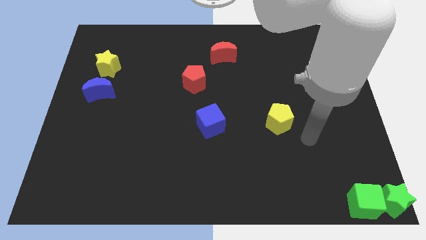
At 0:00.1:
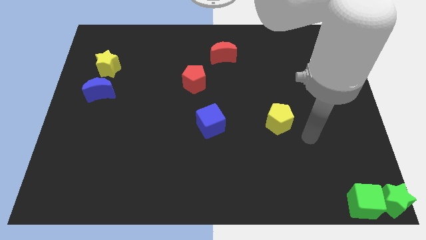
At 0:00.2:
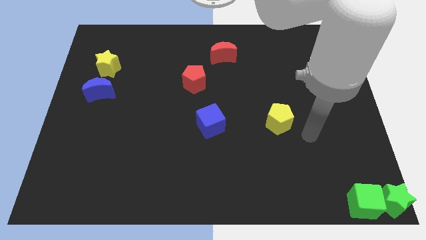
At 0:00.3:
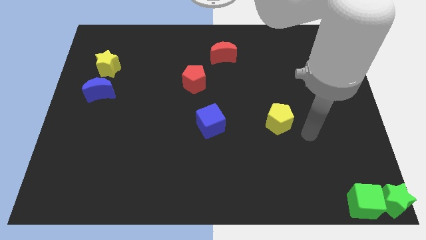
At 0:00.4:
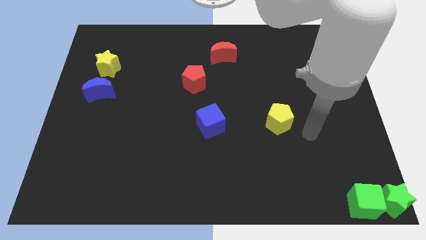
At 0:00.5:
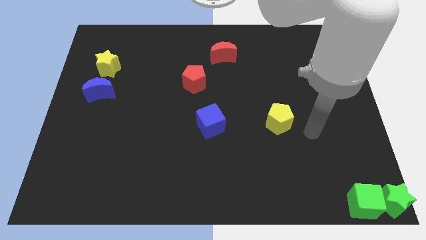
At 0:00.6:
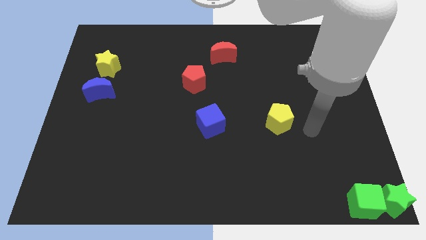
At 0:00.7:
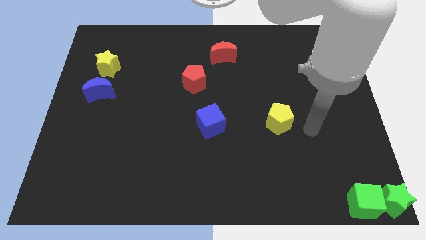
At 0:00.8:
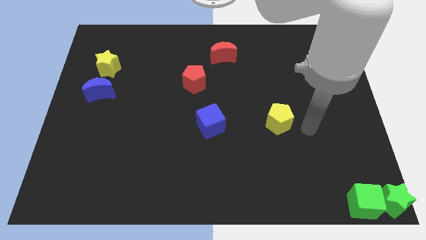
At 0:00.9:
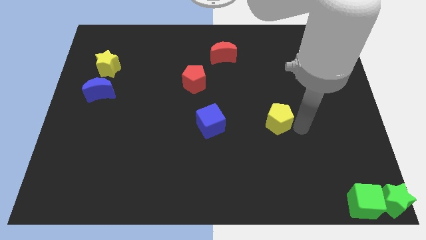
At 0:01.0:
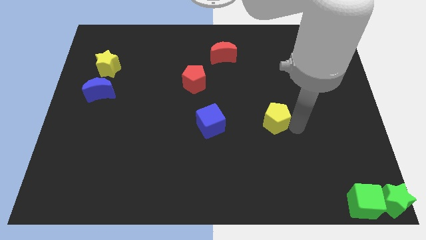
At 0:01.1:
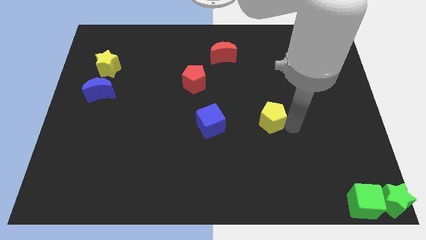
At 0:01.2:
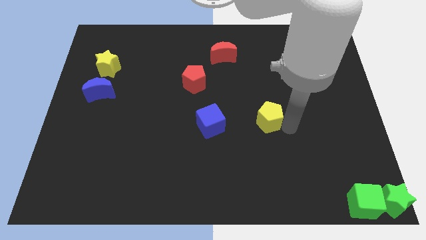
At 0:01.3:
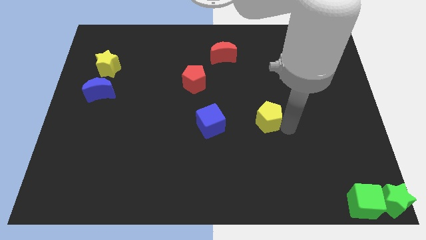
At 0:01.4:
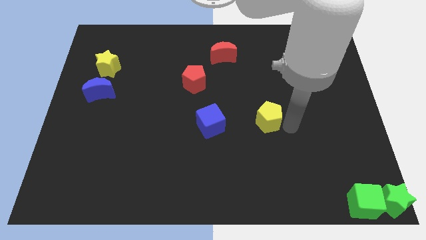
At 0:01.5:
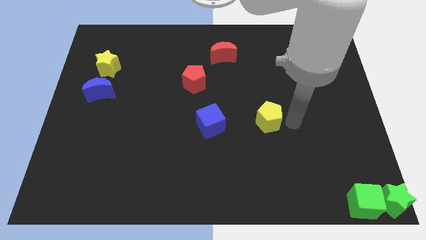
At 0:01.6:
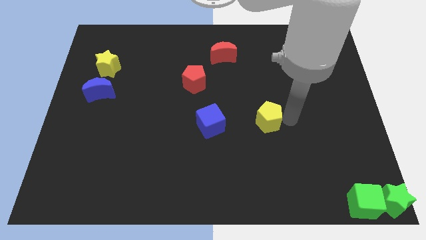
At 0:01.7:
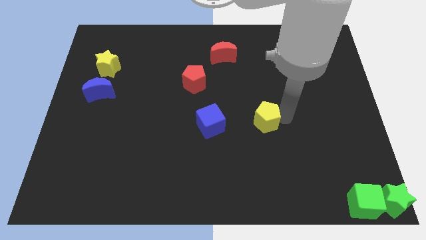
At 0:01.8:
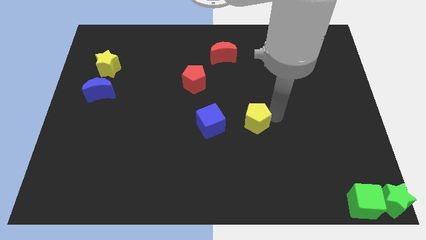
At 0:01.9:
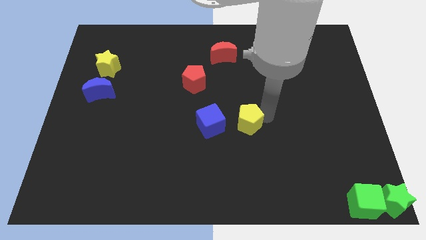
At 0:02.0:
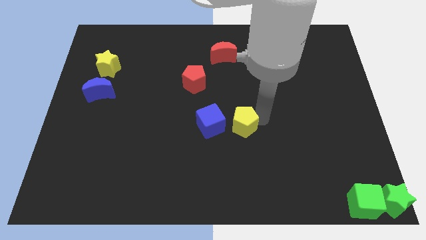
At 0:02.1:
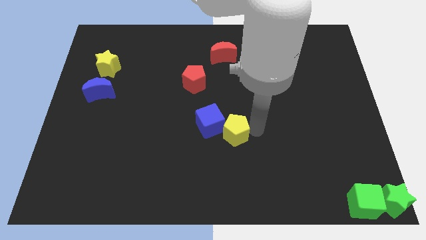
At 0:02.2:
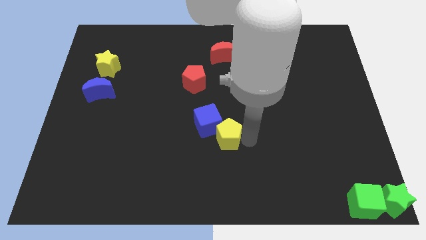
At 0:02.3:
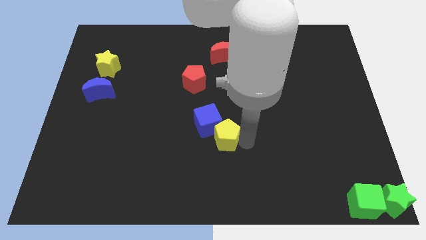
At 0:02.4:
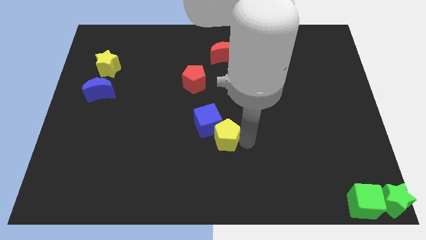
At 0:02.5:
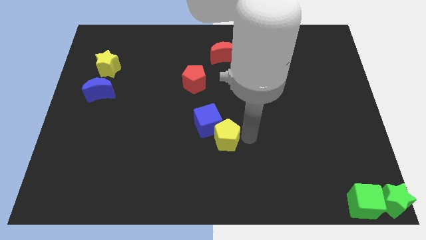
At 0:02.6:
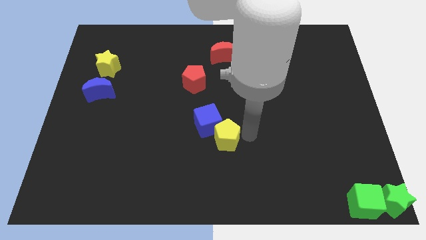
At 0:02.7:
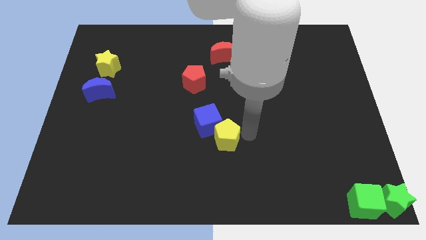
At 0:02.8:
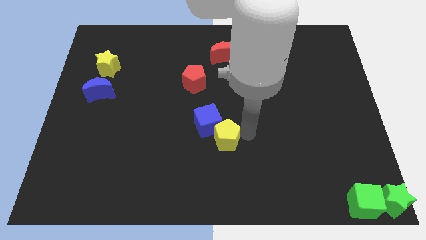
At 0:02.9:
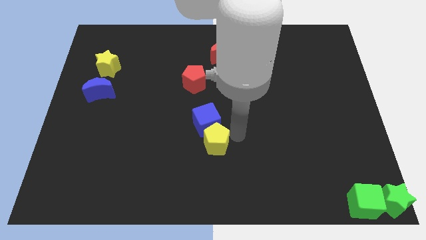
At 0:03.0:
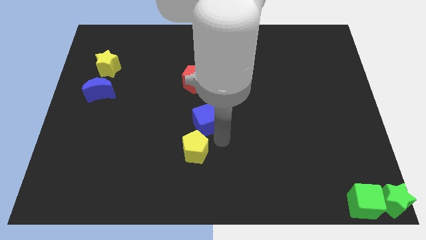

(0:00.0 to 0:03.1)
push the yellow pentagon to the bottom of the blue cube

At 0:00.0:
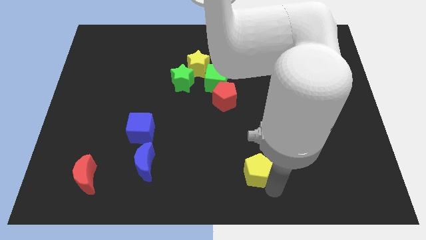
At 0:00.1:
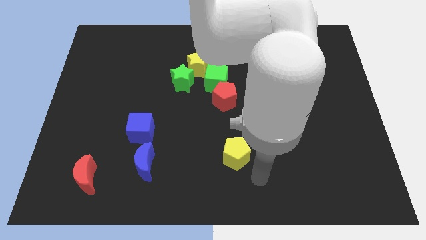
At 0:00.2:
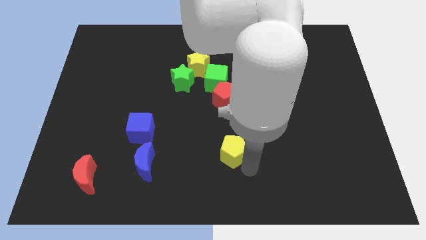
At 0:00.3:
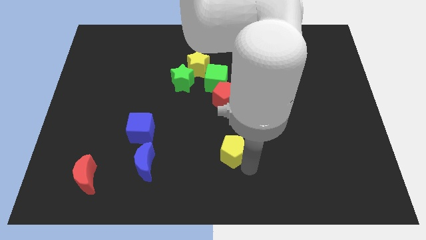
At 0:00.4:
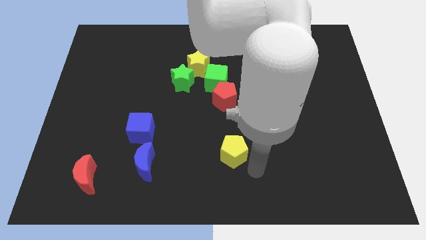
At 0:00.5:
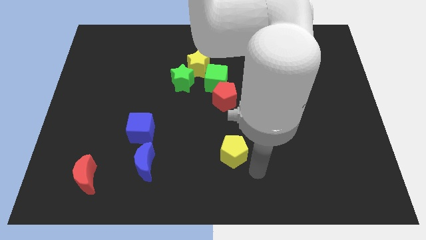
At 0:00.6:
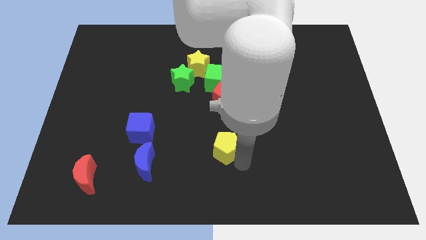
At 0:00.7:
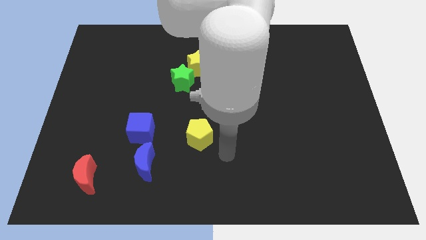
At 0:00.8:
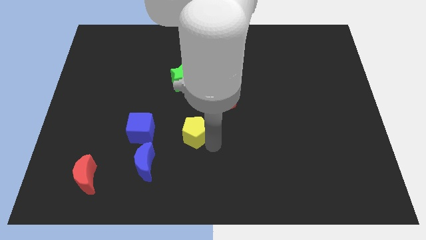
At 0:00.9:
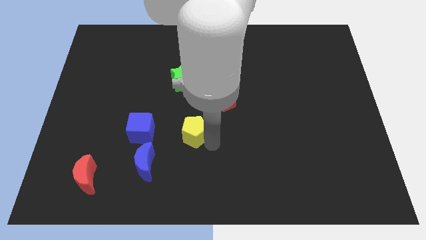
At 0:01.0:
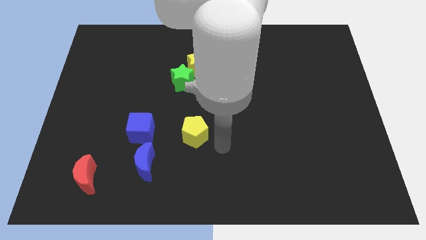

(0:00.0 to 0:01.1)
slide yellow pentagon to the right of blue cube

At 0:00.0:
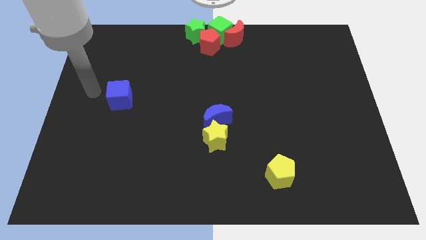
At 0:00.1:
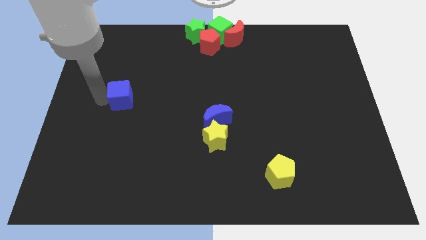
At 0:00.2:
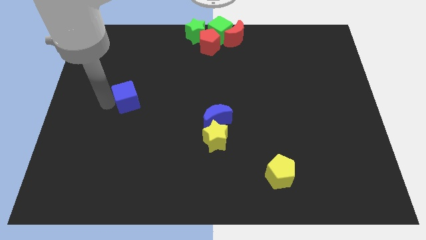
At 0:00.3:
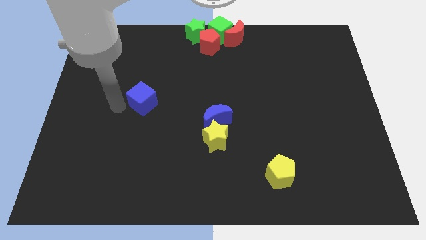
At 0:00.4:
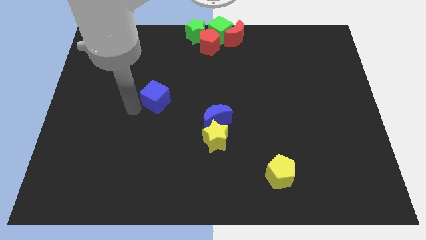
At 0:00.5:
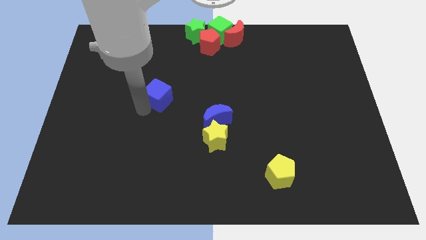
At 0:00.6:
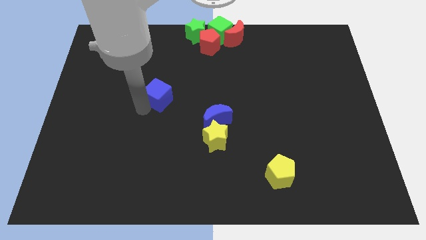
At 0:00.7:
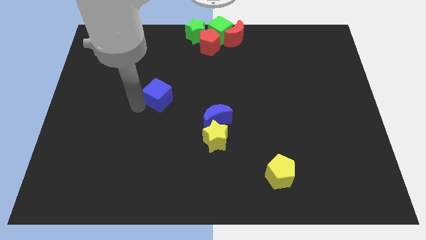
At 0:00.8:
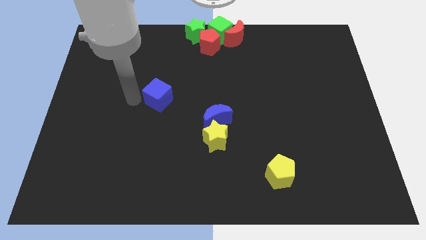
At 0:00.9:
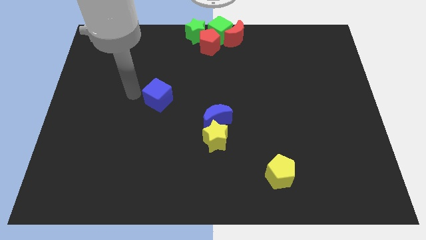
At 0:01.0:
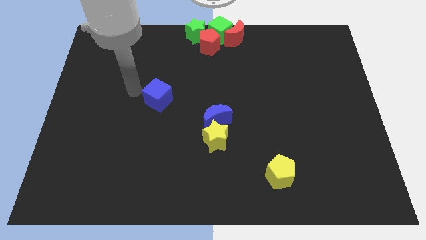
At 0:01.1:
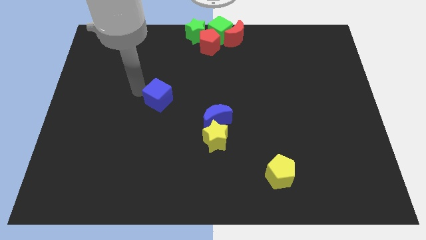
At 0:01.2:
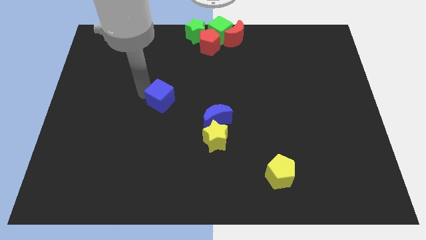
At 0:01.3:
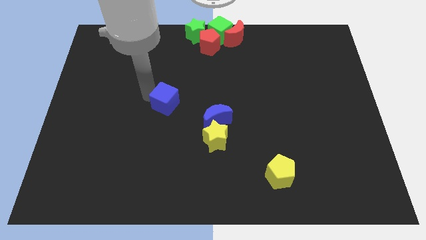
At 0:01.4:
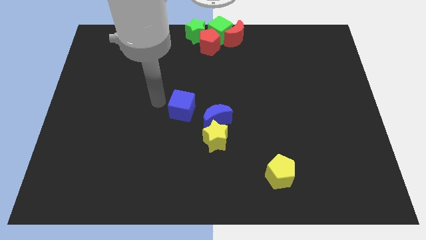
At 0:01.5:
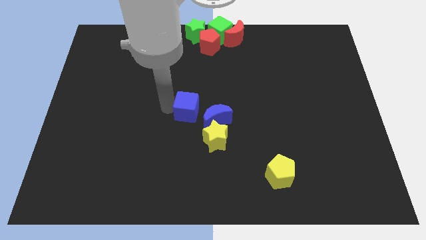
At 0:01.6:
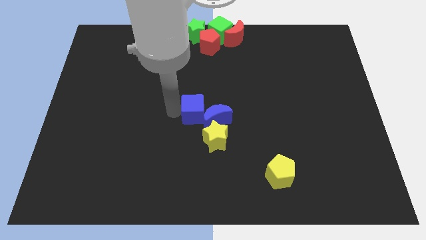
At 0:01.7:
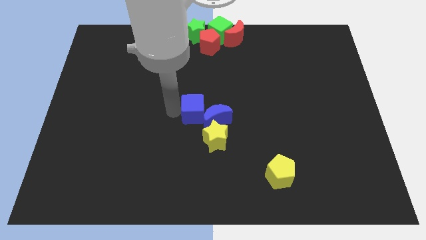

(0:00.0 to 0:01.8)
move the blue cube into the blue moon

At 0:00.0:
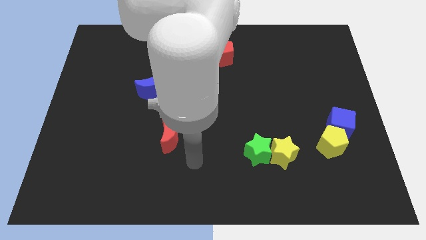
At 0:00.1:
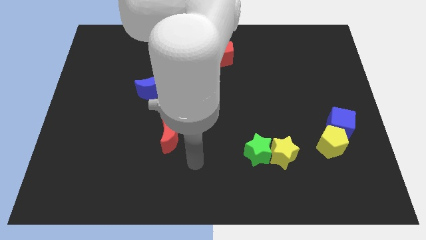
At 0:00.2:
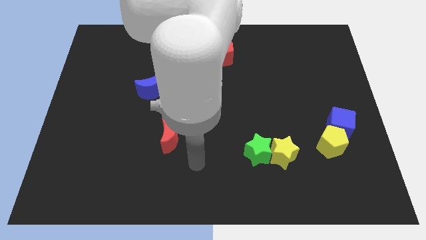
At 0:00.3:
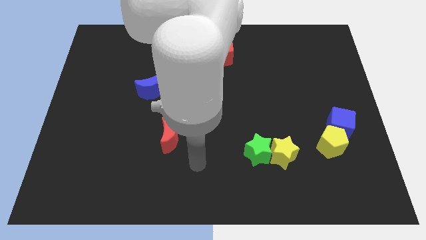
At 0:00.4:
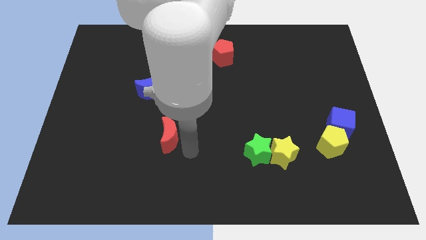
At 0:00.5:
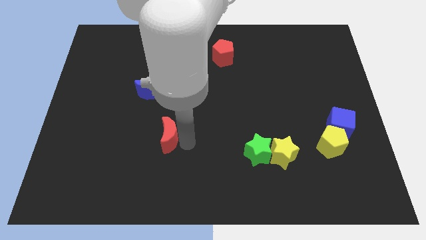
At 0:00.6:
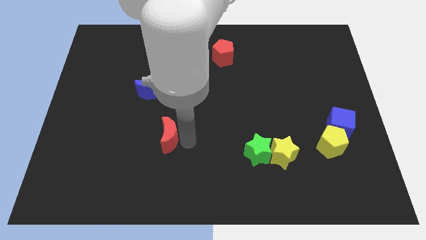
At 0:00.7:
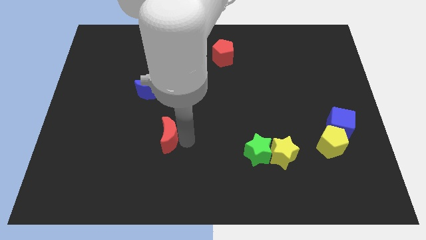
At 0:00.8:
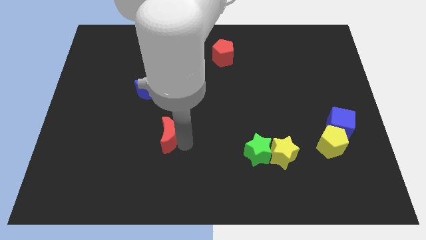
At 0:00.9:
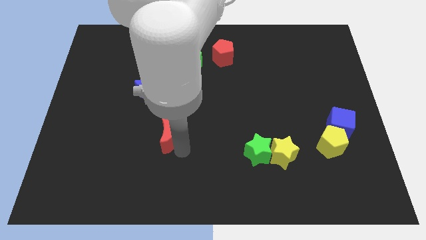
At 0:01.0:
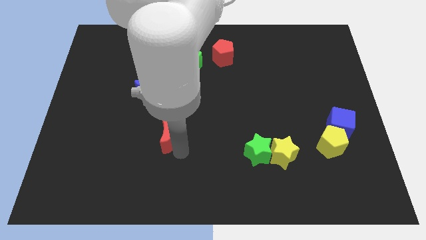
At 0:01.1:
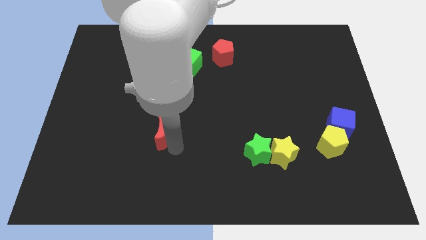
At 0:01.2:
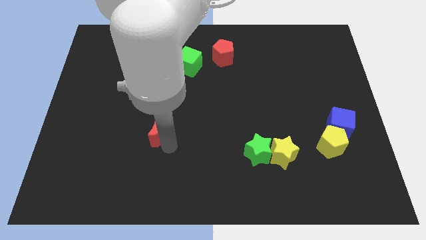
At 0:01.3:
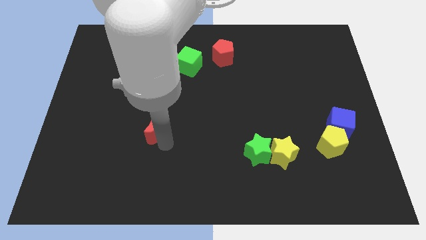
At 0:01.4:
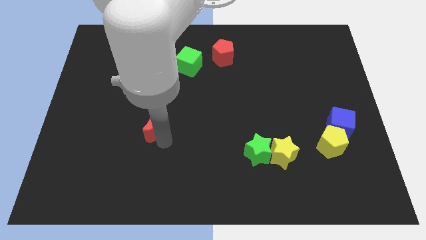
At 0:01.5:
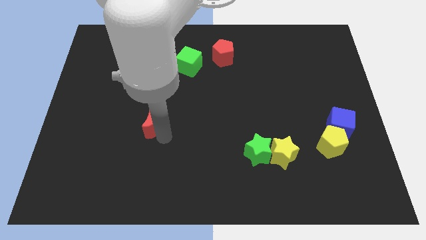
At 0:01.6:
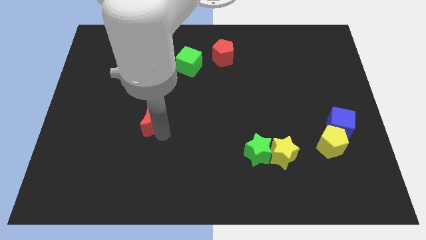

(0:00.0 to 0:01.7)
move the red crescent to the bottom of the blue crescent

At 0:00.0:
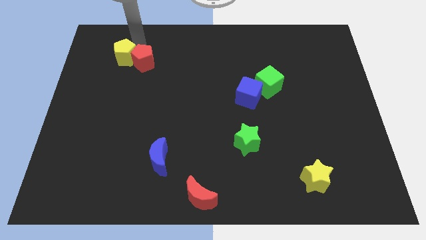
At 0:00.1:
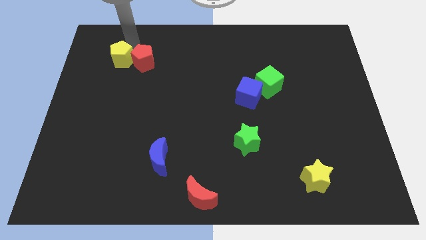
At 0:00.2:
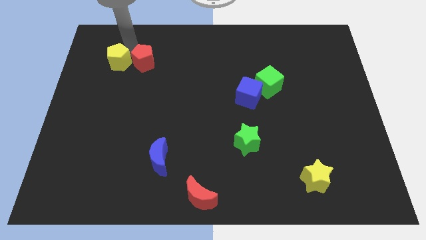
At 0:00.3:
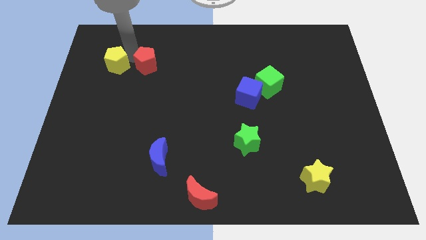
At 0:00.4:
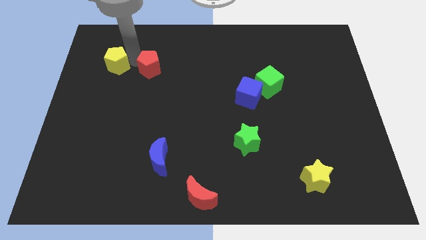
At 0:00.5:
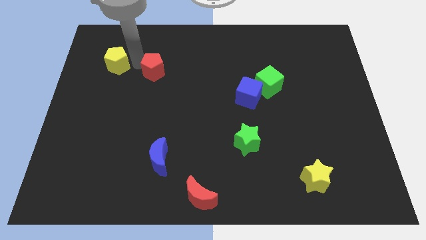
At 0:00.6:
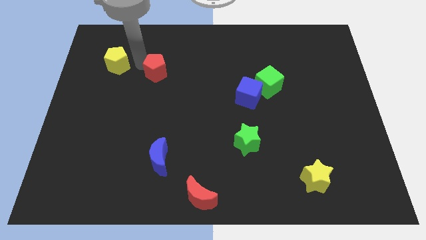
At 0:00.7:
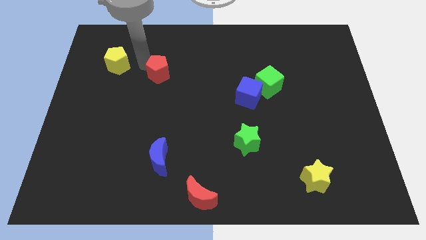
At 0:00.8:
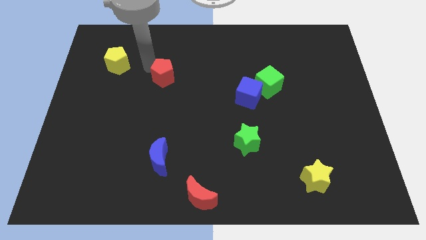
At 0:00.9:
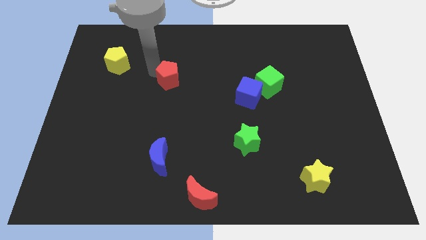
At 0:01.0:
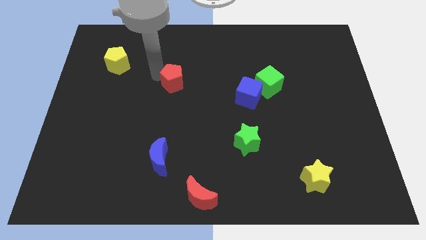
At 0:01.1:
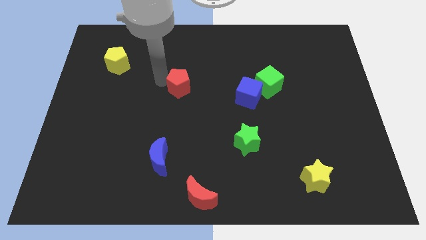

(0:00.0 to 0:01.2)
separate the pentagons
